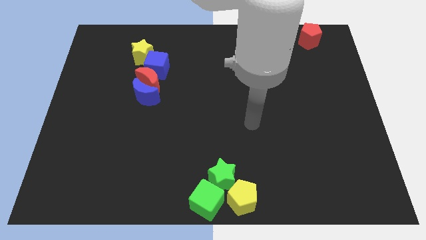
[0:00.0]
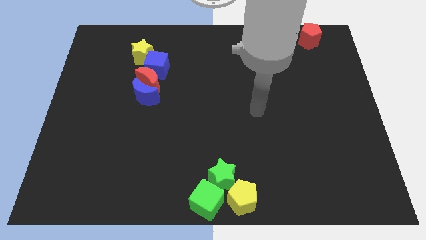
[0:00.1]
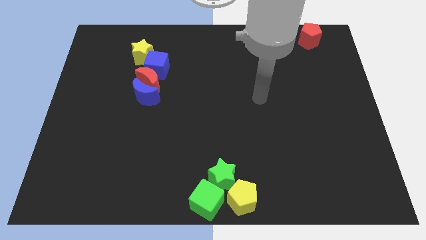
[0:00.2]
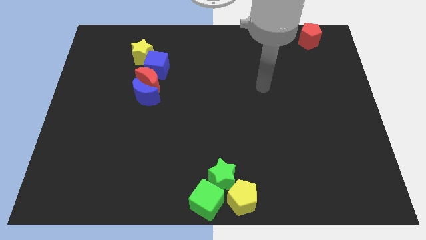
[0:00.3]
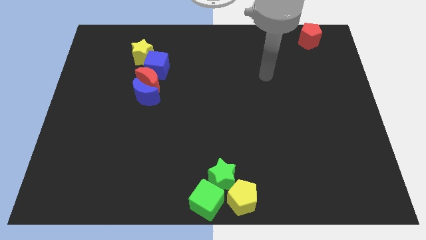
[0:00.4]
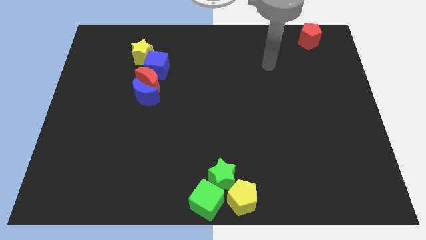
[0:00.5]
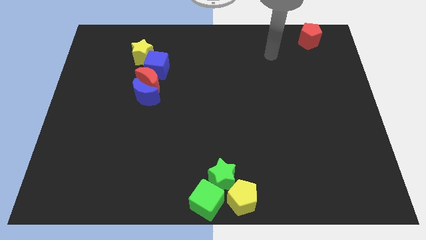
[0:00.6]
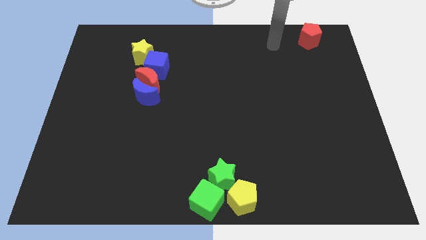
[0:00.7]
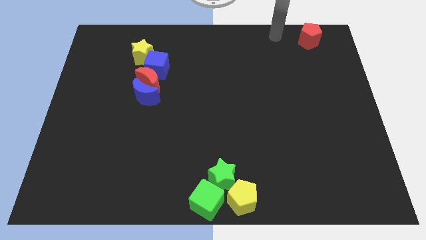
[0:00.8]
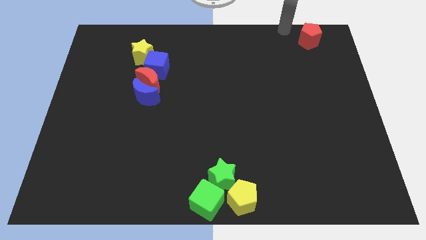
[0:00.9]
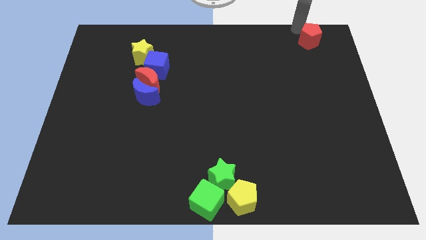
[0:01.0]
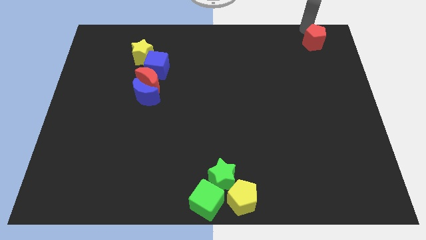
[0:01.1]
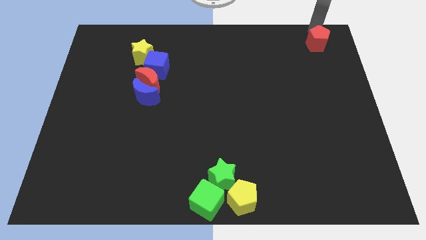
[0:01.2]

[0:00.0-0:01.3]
move your arm to the top of red pentagon

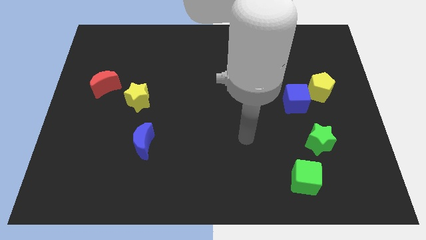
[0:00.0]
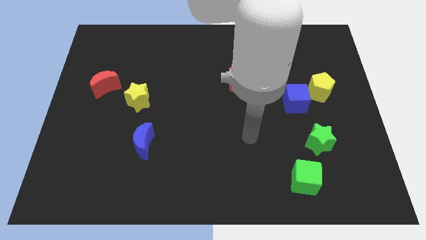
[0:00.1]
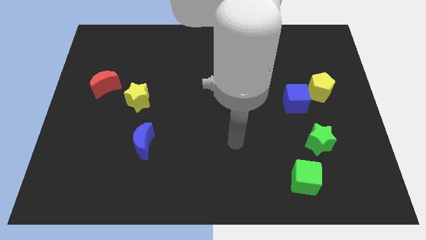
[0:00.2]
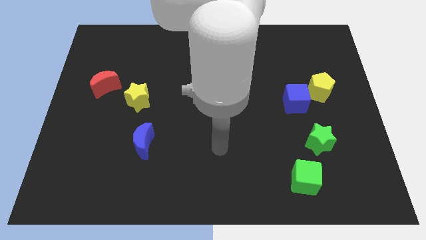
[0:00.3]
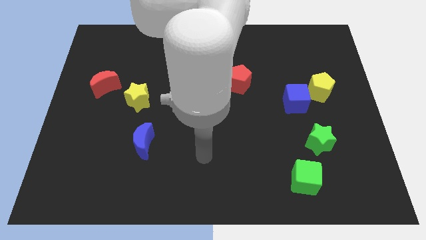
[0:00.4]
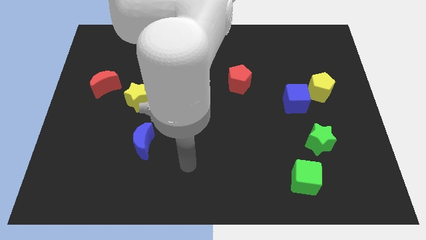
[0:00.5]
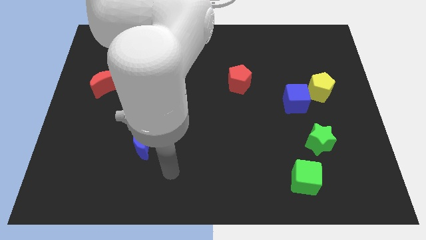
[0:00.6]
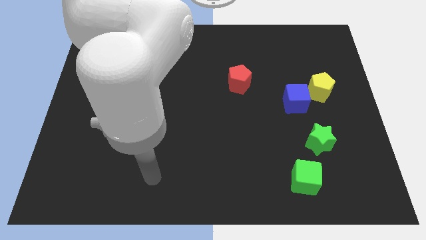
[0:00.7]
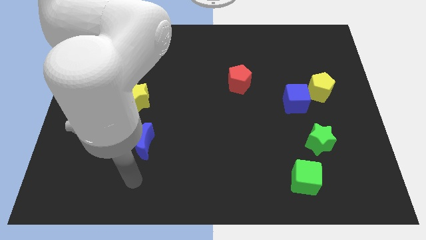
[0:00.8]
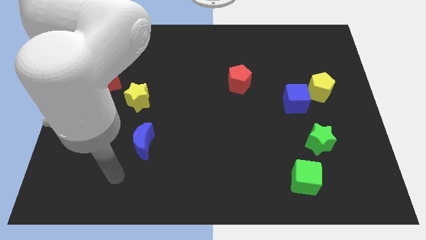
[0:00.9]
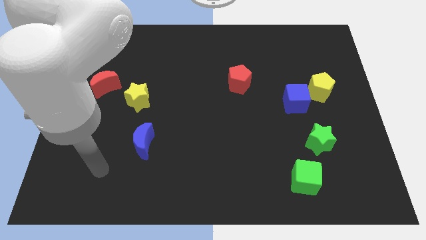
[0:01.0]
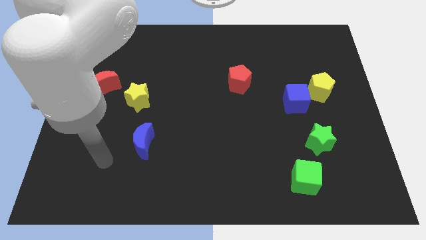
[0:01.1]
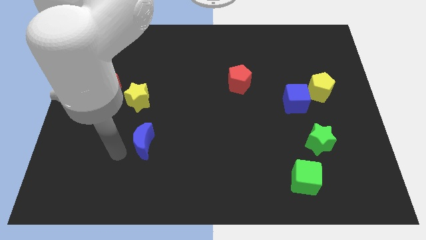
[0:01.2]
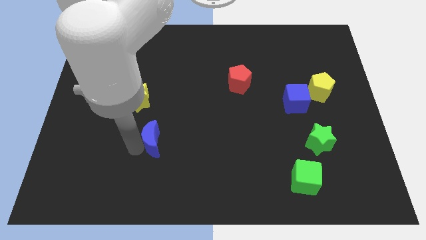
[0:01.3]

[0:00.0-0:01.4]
place the arm left to the blue moon

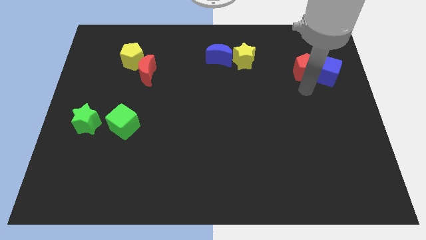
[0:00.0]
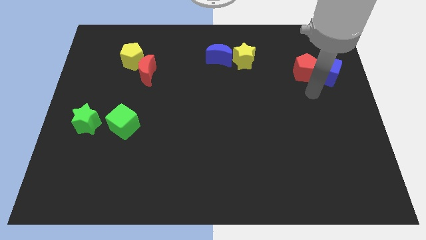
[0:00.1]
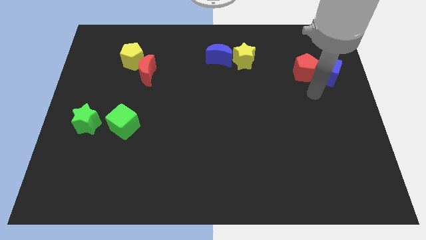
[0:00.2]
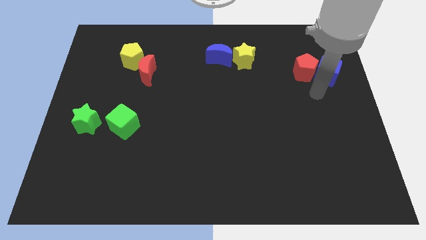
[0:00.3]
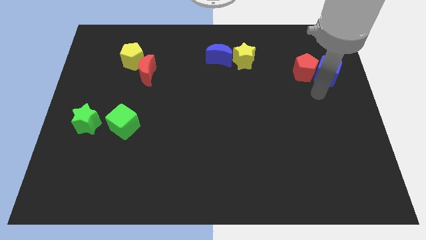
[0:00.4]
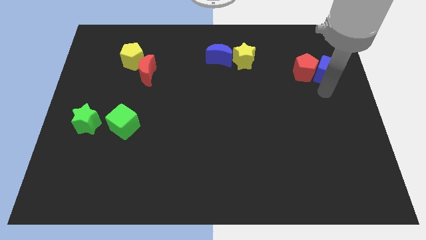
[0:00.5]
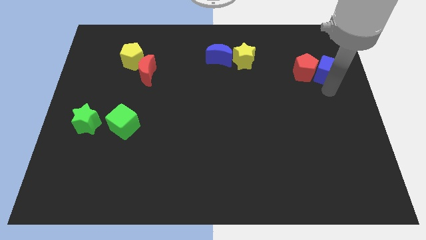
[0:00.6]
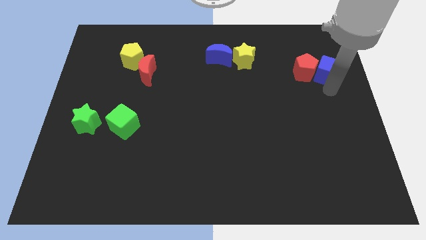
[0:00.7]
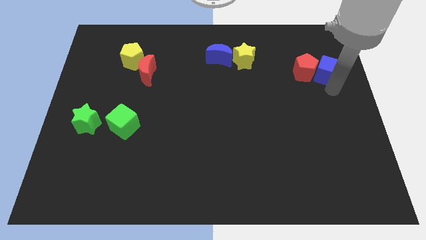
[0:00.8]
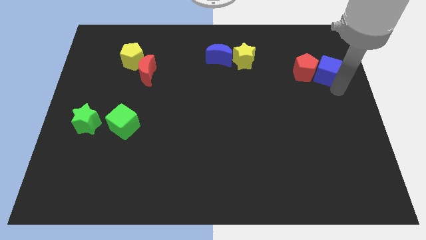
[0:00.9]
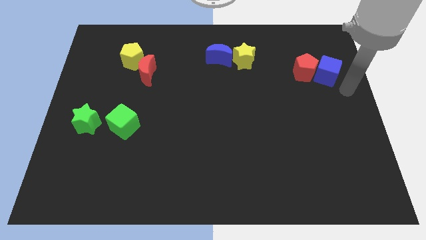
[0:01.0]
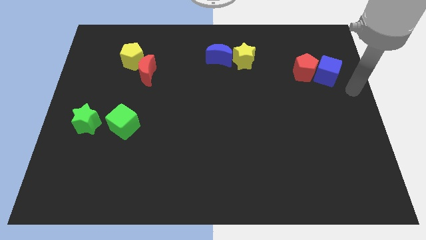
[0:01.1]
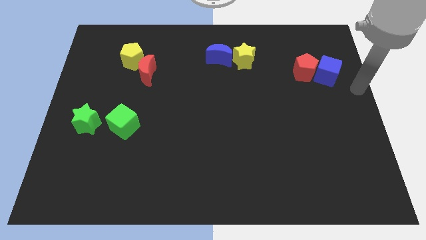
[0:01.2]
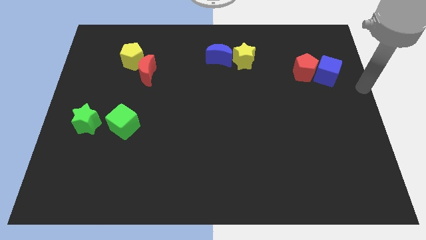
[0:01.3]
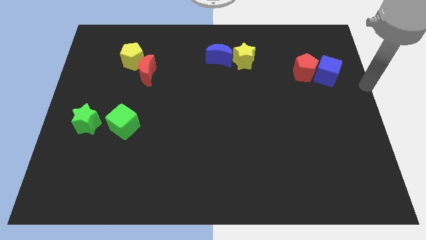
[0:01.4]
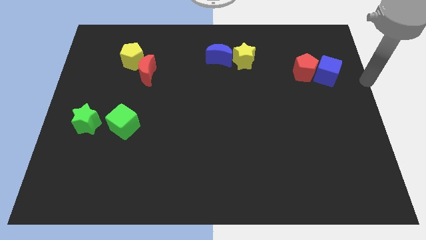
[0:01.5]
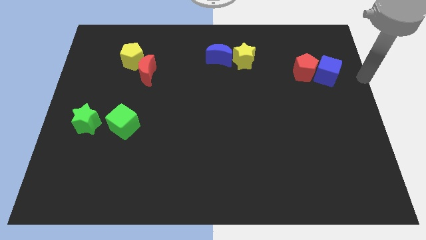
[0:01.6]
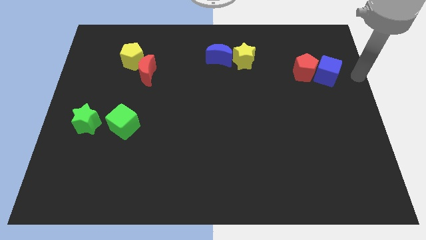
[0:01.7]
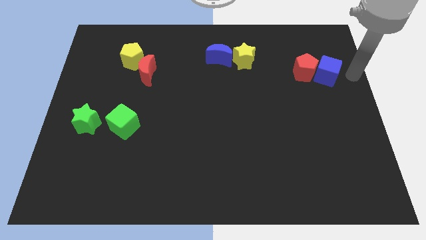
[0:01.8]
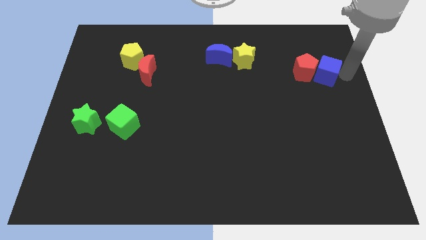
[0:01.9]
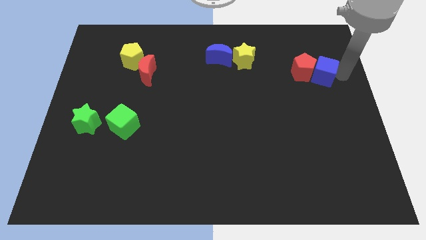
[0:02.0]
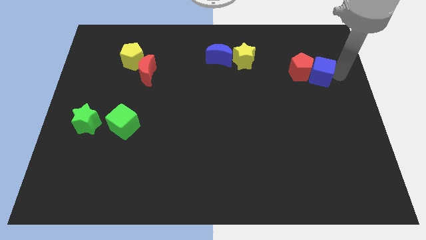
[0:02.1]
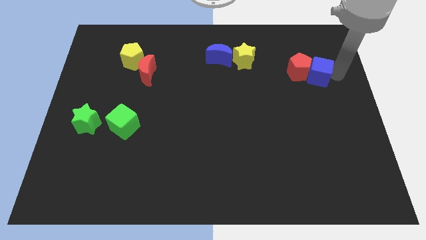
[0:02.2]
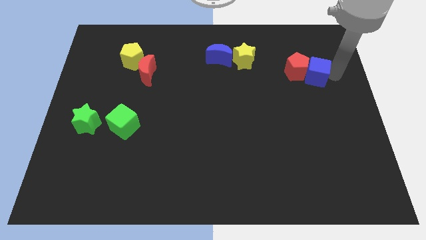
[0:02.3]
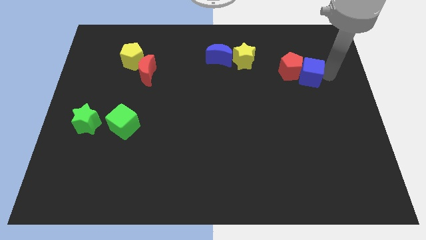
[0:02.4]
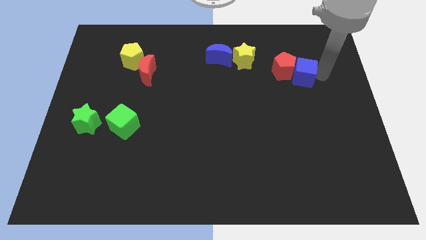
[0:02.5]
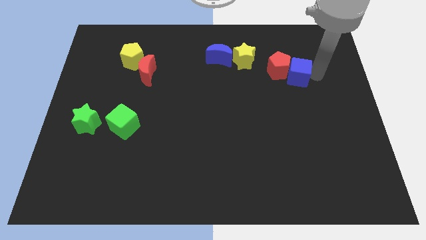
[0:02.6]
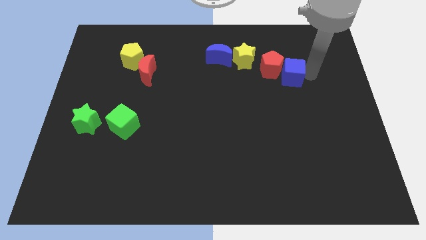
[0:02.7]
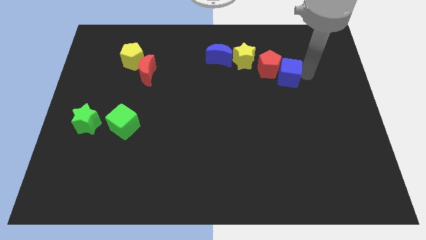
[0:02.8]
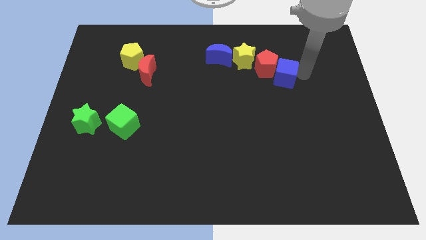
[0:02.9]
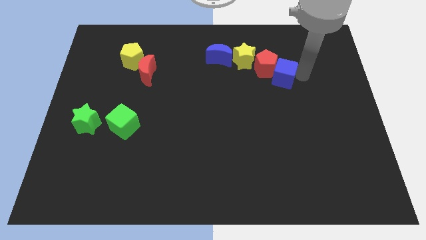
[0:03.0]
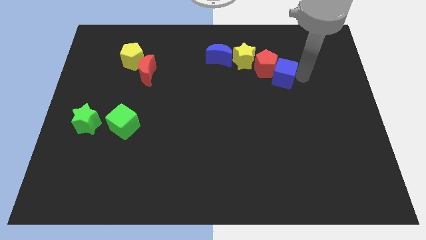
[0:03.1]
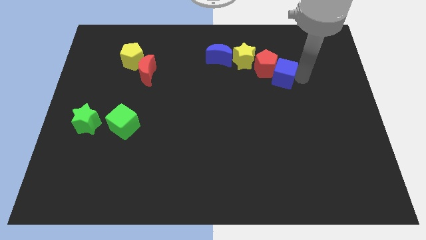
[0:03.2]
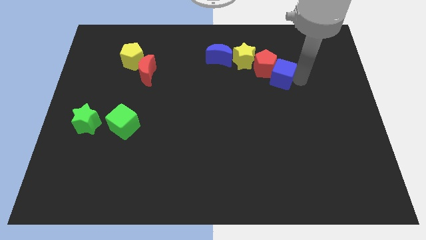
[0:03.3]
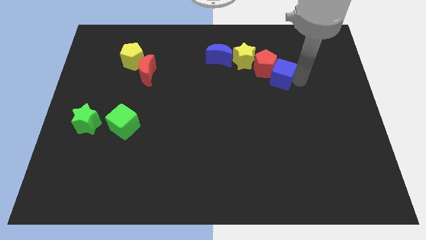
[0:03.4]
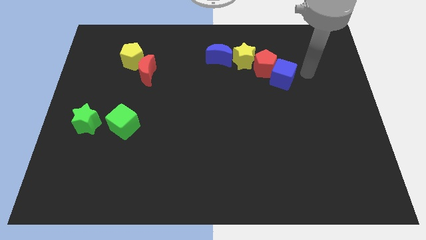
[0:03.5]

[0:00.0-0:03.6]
drag the red pentagon and blue cube diagonally to the bottom right side of the yellow star

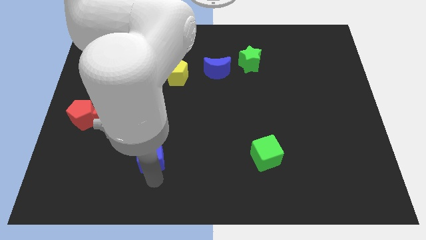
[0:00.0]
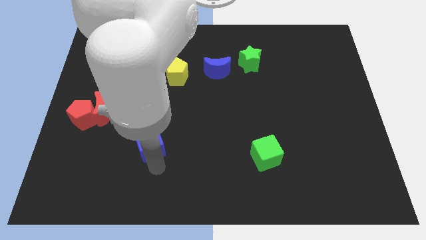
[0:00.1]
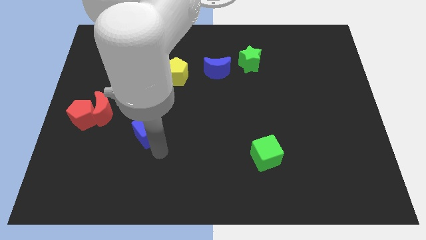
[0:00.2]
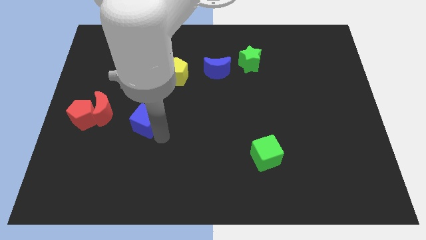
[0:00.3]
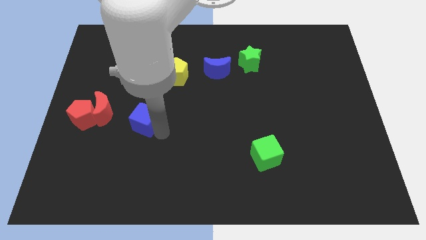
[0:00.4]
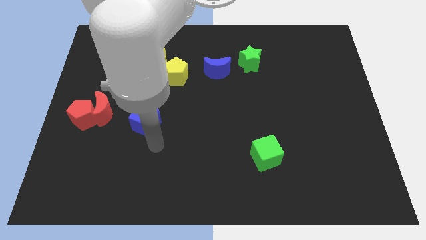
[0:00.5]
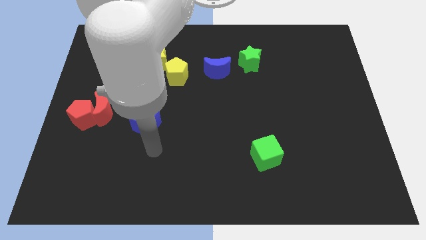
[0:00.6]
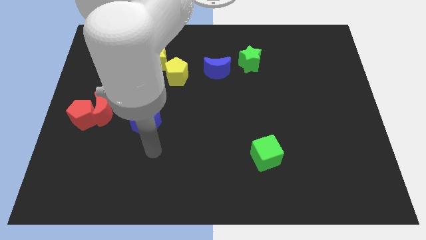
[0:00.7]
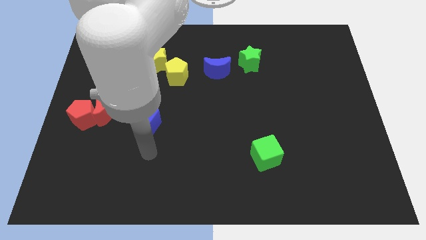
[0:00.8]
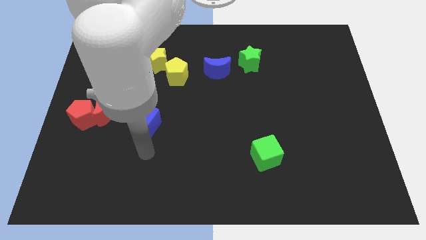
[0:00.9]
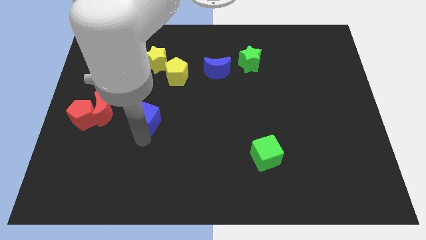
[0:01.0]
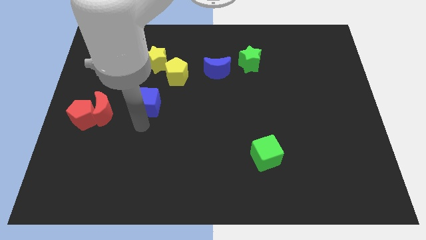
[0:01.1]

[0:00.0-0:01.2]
move the blue cube right to the red crescent

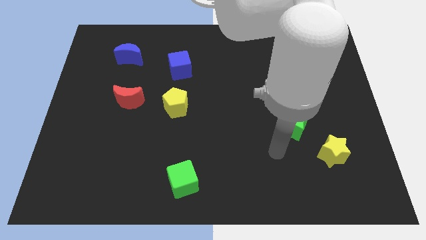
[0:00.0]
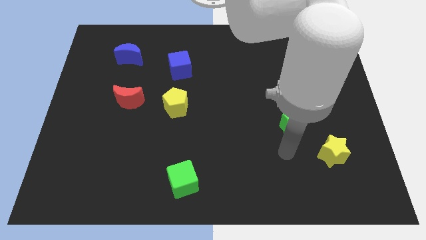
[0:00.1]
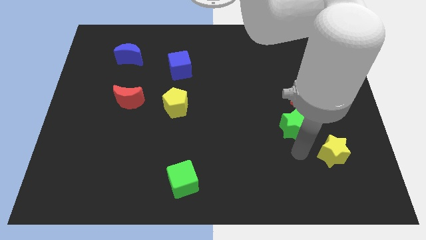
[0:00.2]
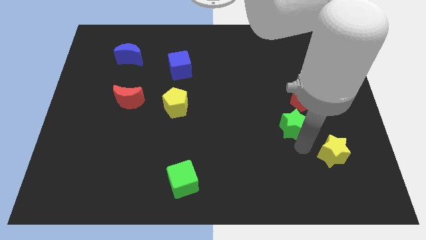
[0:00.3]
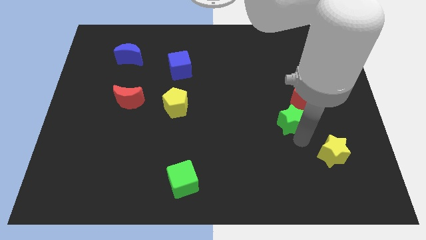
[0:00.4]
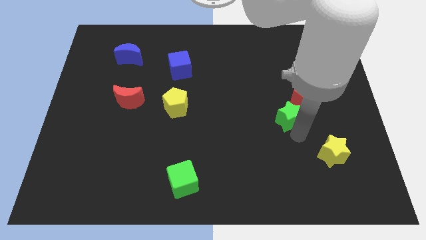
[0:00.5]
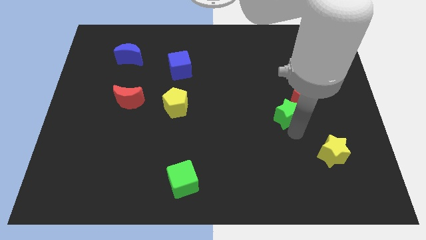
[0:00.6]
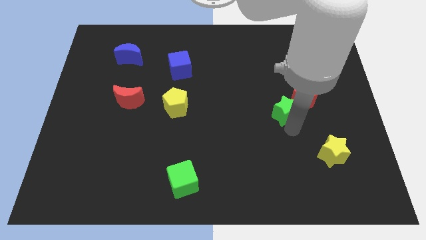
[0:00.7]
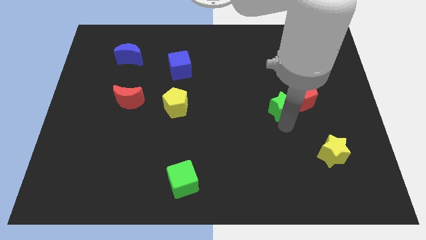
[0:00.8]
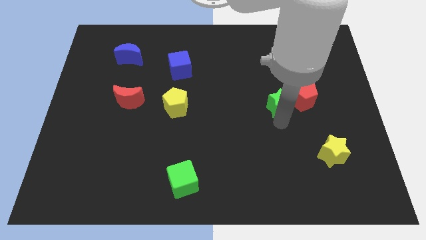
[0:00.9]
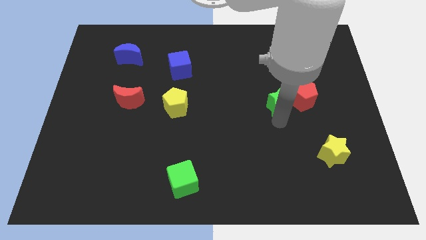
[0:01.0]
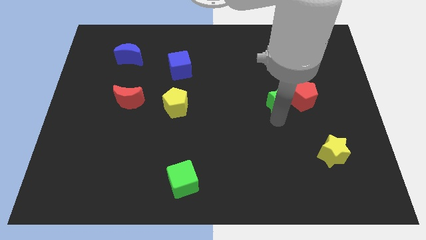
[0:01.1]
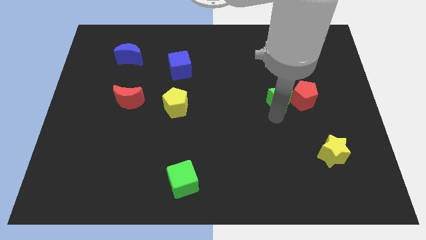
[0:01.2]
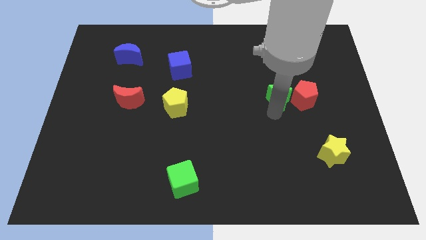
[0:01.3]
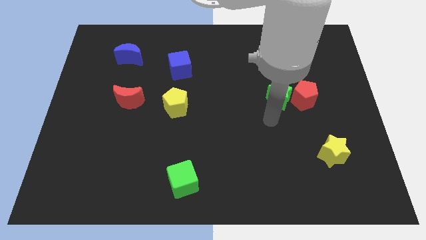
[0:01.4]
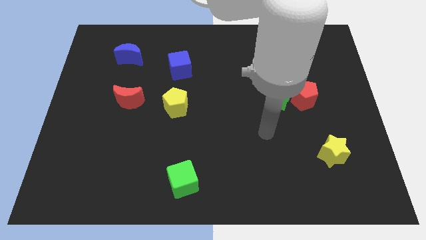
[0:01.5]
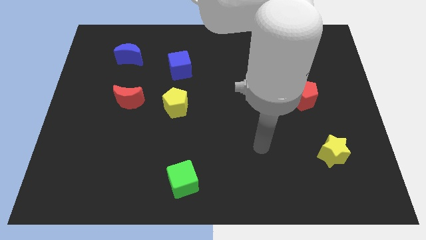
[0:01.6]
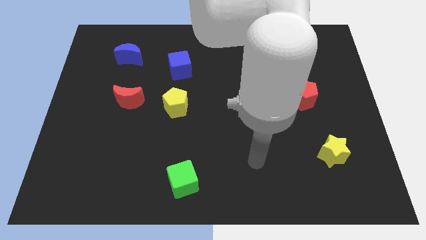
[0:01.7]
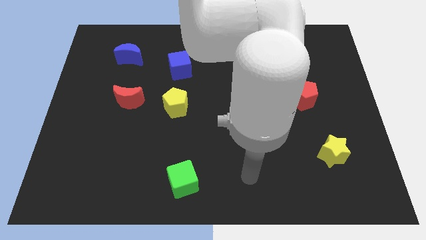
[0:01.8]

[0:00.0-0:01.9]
move the green star close to the red pentagon
